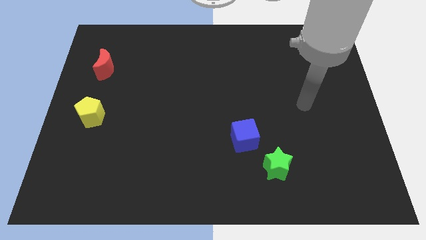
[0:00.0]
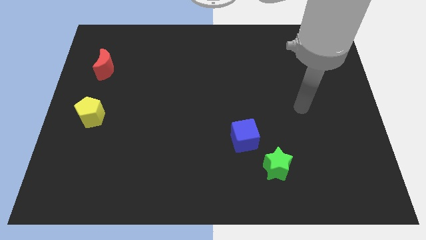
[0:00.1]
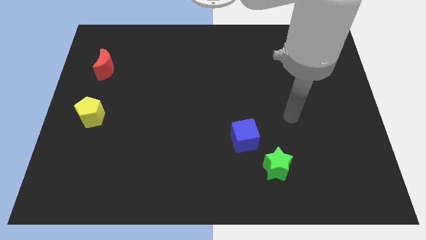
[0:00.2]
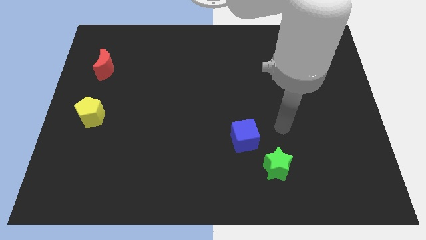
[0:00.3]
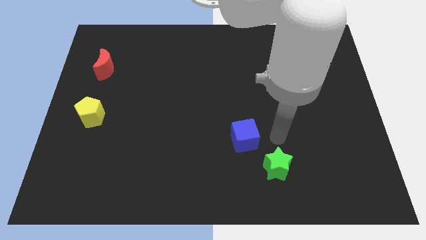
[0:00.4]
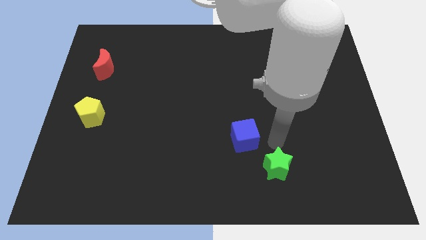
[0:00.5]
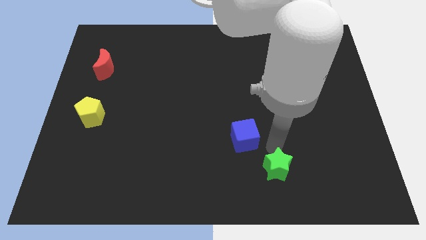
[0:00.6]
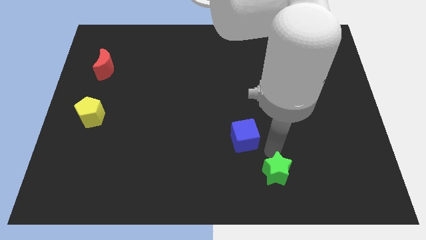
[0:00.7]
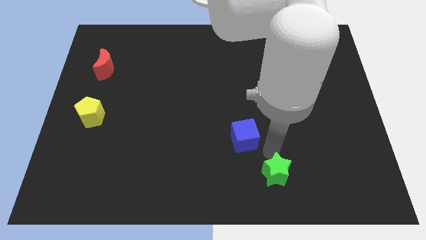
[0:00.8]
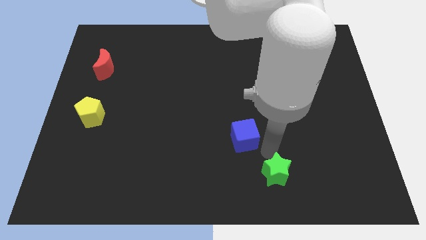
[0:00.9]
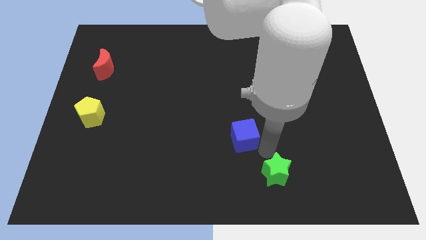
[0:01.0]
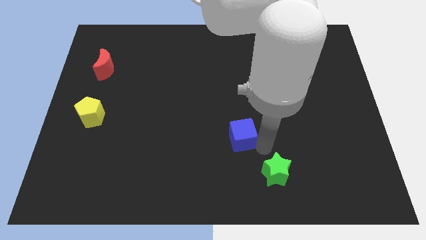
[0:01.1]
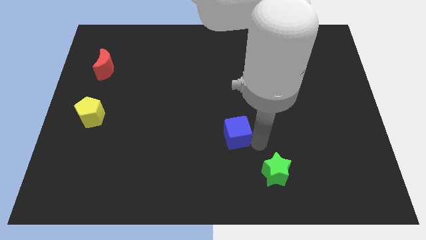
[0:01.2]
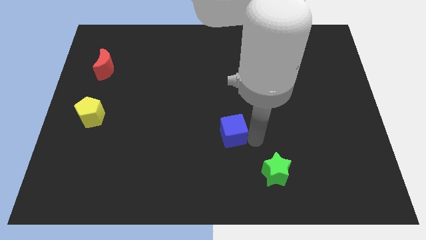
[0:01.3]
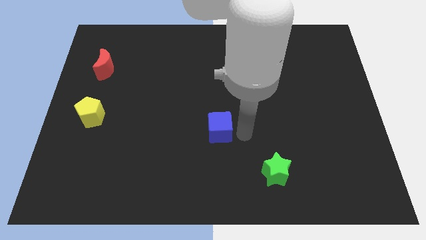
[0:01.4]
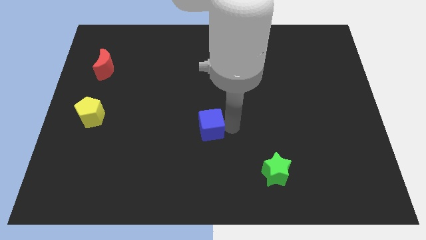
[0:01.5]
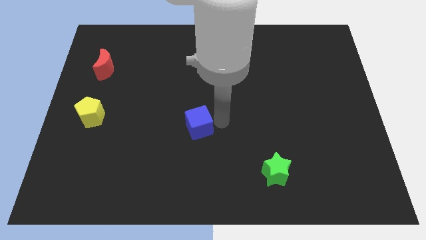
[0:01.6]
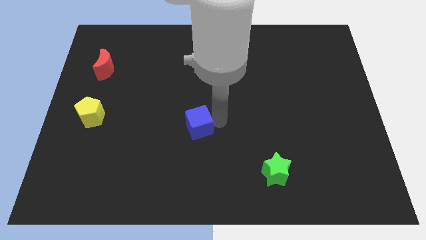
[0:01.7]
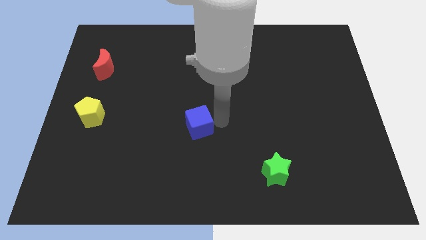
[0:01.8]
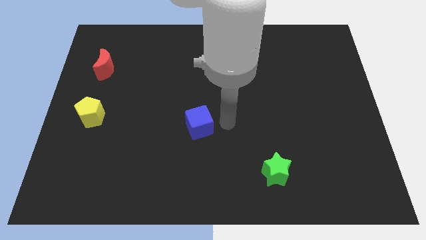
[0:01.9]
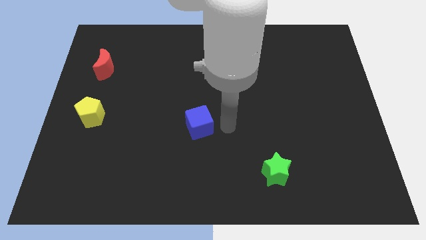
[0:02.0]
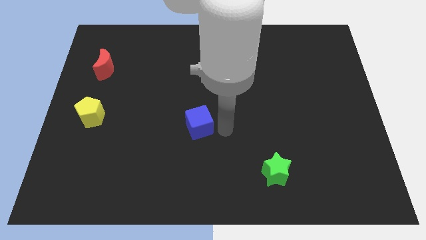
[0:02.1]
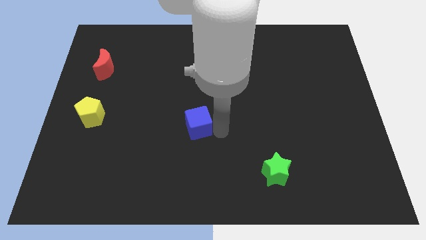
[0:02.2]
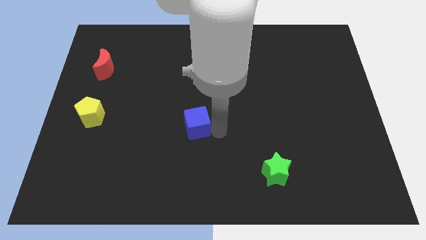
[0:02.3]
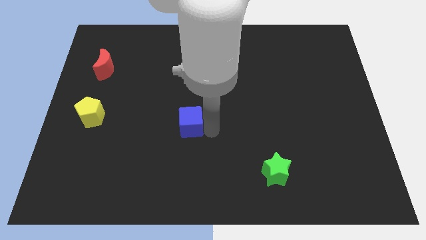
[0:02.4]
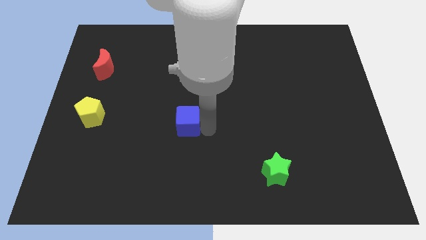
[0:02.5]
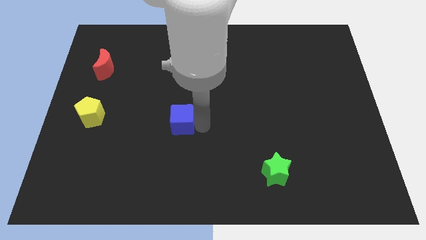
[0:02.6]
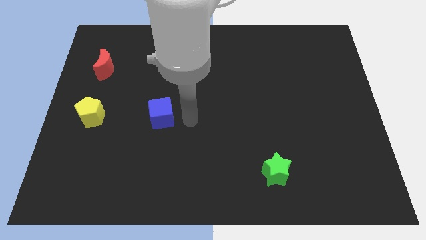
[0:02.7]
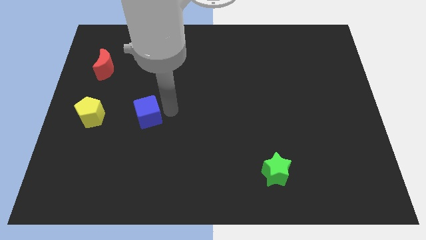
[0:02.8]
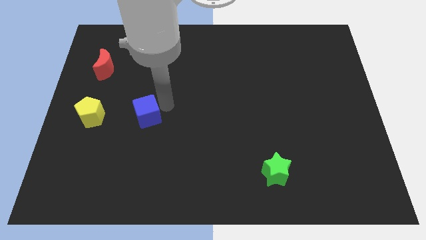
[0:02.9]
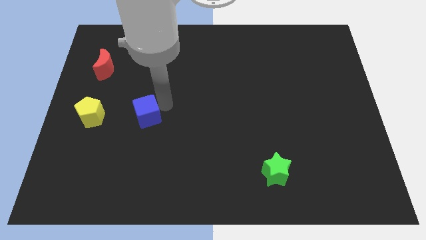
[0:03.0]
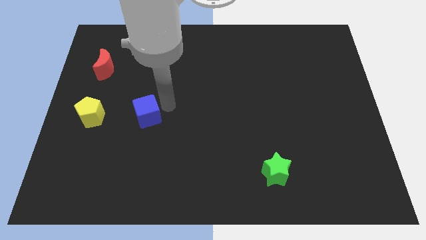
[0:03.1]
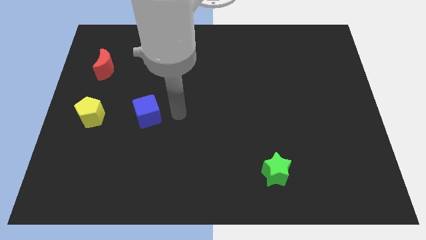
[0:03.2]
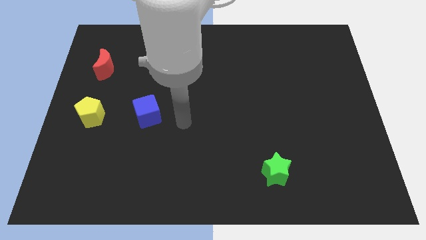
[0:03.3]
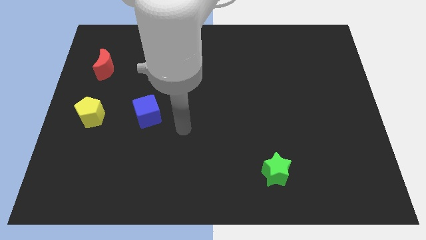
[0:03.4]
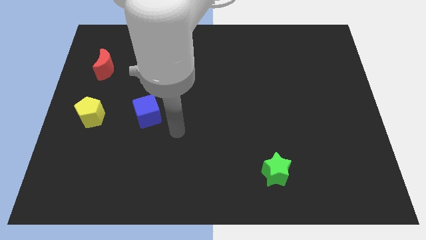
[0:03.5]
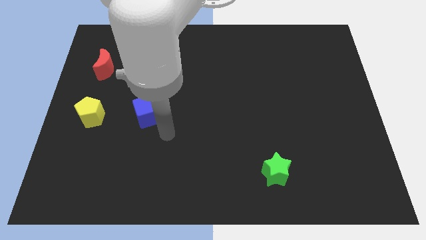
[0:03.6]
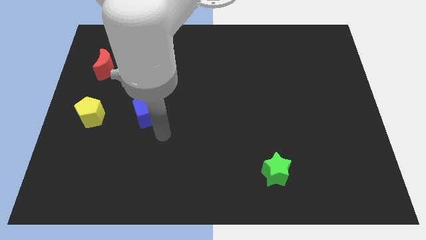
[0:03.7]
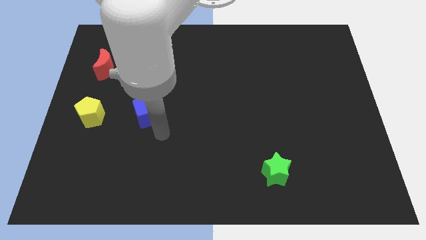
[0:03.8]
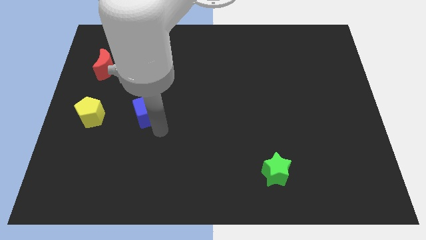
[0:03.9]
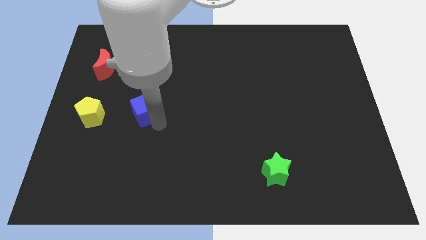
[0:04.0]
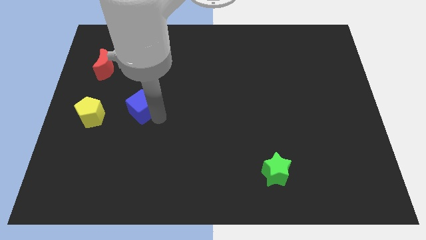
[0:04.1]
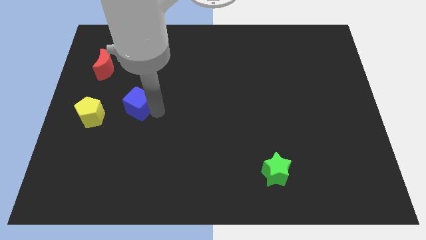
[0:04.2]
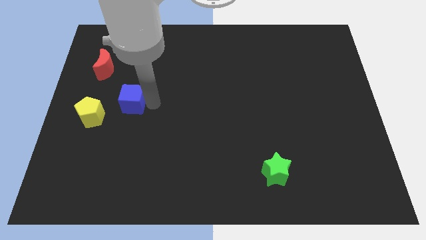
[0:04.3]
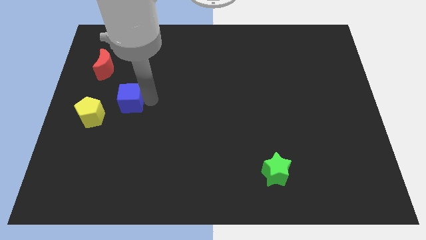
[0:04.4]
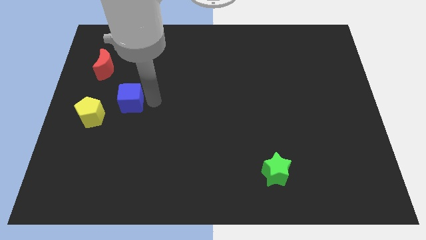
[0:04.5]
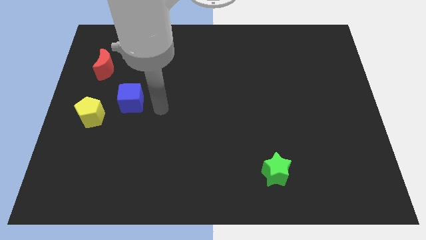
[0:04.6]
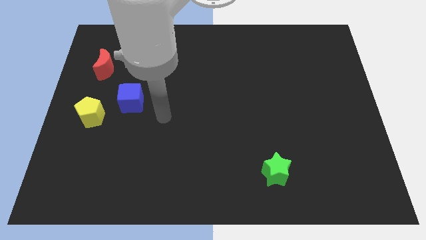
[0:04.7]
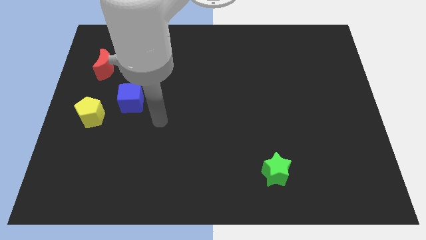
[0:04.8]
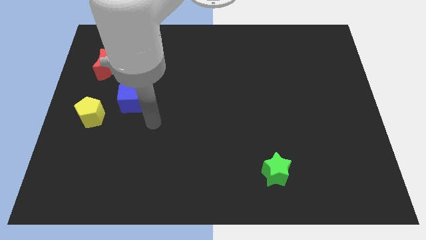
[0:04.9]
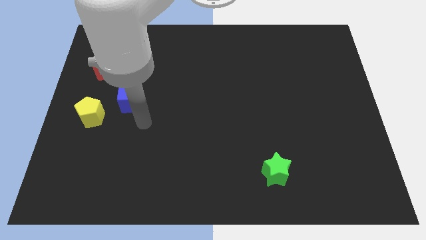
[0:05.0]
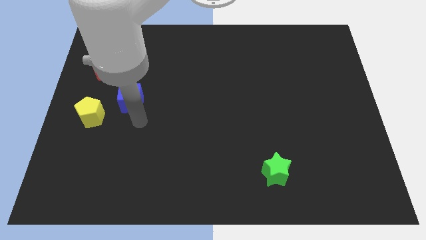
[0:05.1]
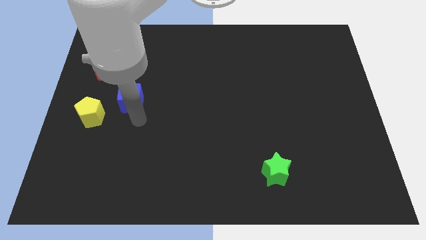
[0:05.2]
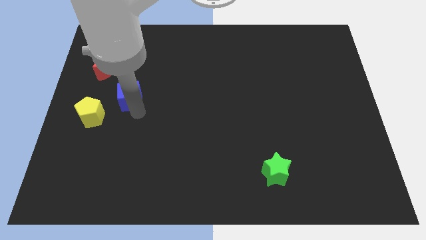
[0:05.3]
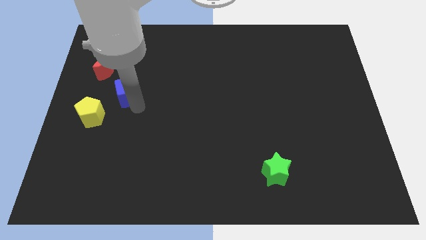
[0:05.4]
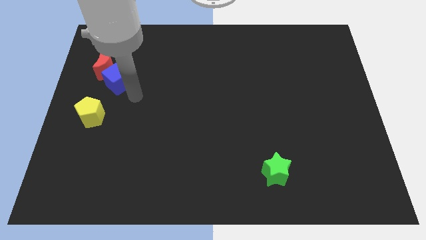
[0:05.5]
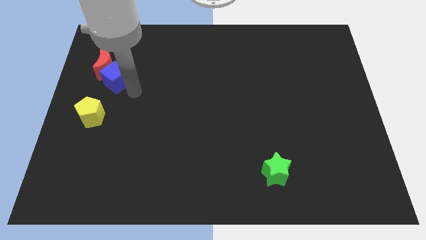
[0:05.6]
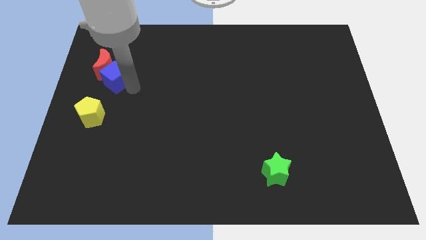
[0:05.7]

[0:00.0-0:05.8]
push the blue block to the moon

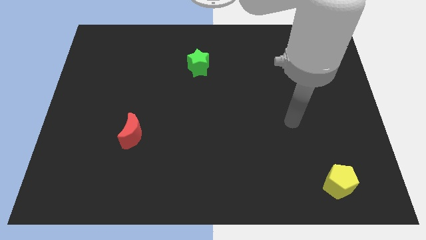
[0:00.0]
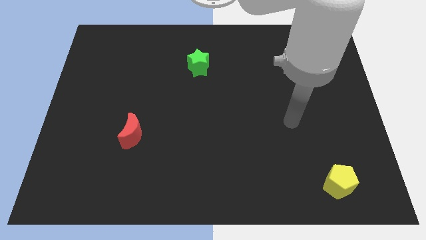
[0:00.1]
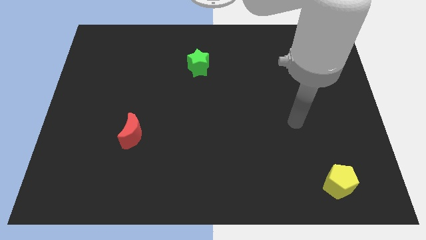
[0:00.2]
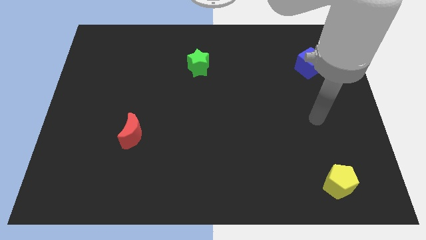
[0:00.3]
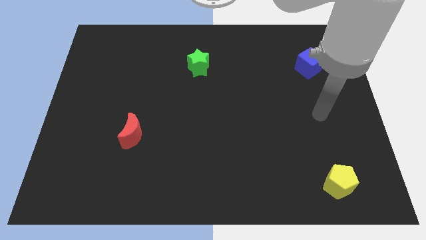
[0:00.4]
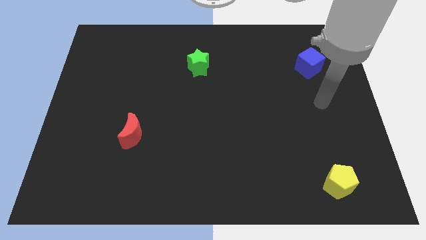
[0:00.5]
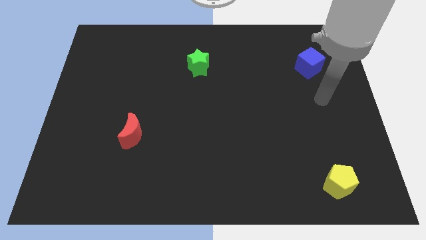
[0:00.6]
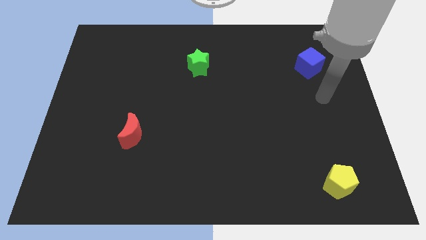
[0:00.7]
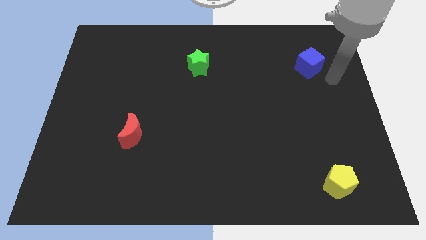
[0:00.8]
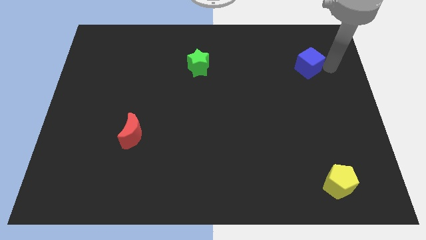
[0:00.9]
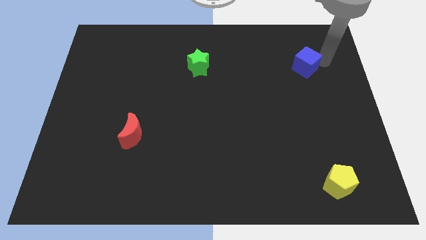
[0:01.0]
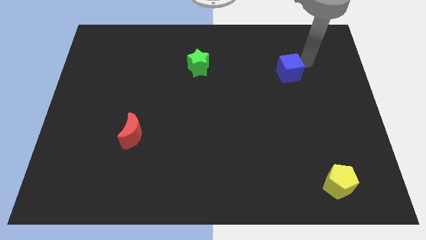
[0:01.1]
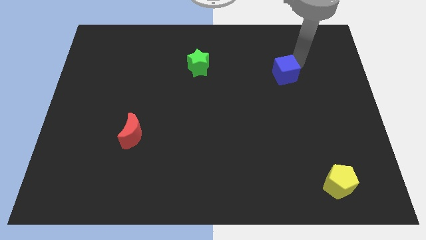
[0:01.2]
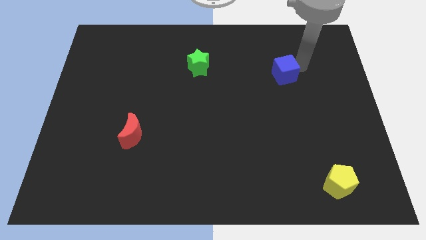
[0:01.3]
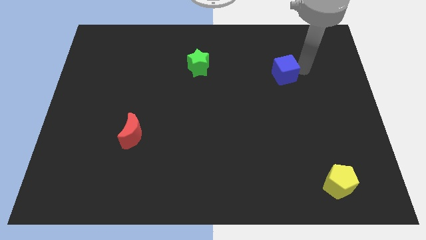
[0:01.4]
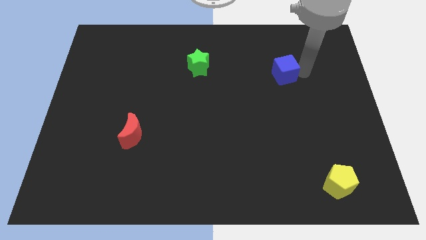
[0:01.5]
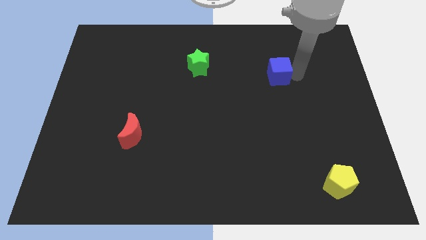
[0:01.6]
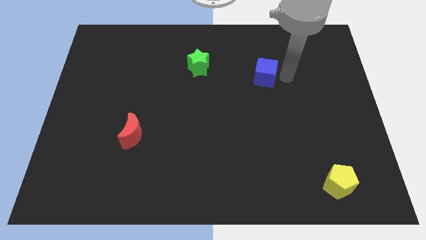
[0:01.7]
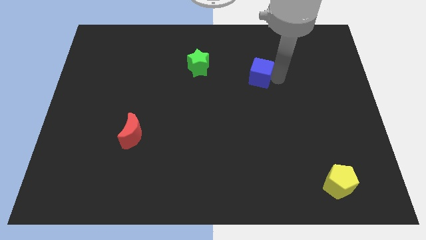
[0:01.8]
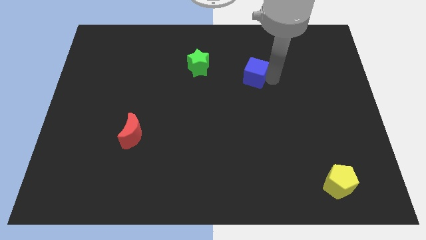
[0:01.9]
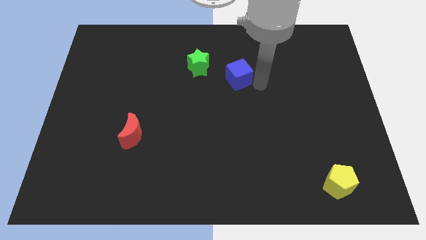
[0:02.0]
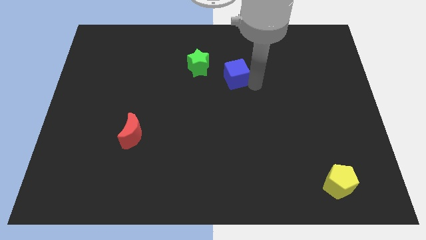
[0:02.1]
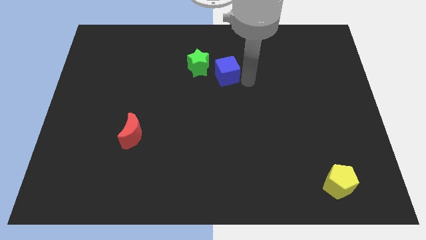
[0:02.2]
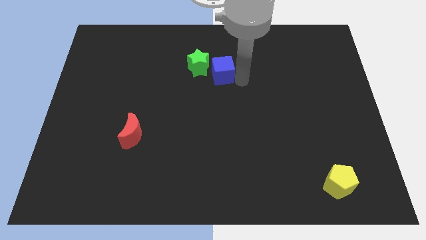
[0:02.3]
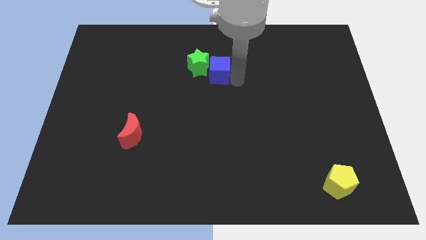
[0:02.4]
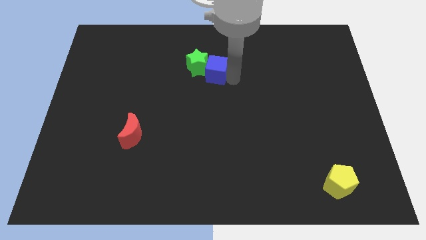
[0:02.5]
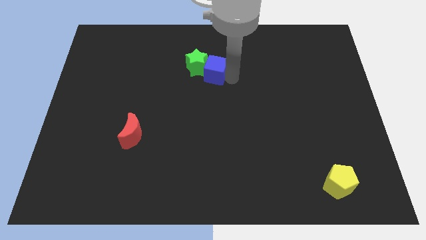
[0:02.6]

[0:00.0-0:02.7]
move the cube towards the star

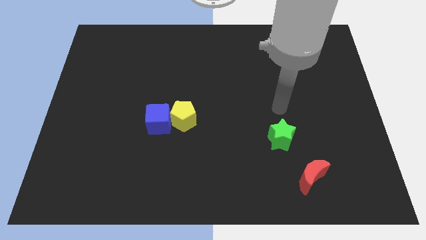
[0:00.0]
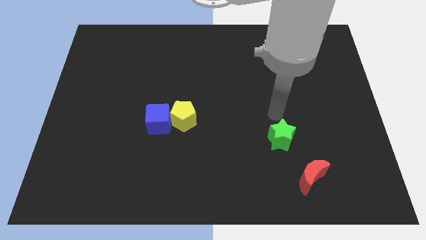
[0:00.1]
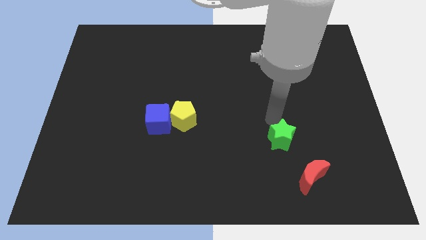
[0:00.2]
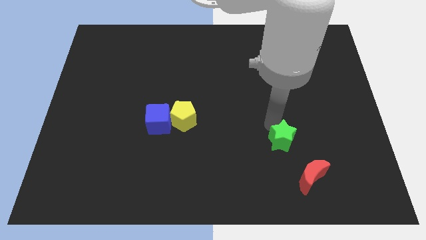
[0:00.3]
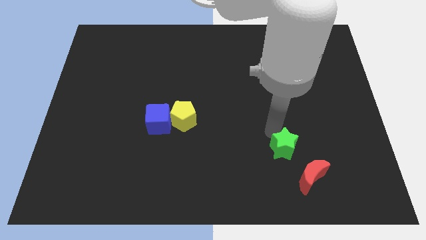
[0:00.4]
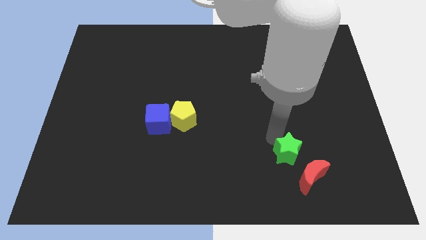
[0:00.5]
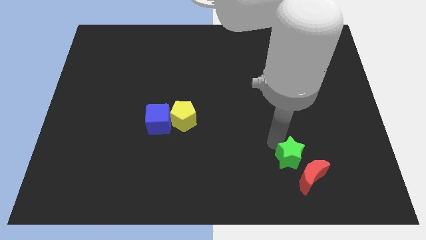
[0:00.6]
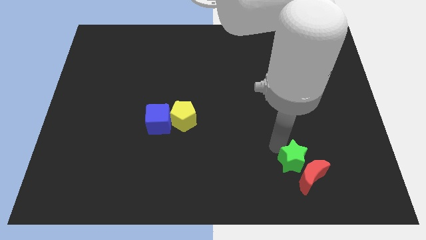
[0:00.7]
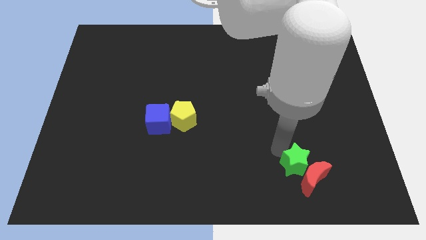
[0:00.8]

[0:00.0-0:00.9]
push the green block next to the red block
